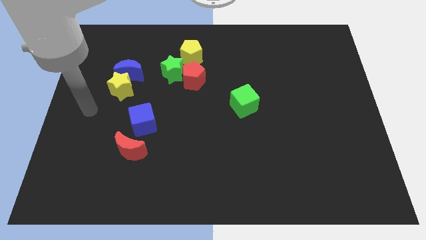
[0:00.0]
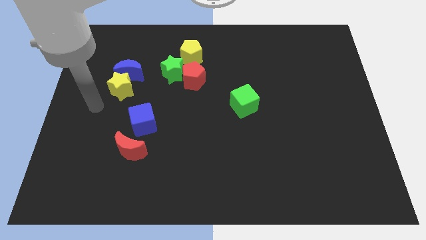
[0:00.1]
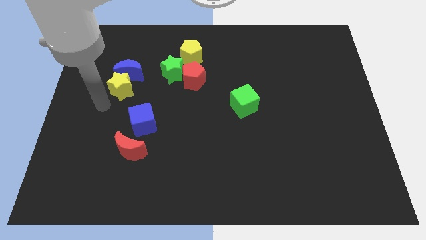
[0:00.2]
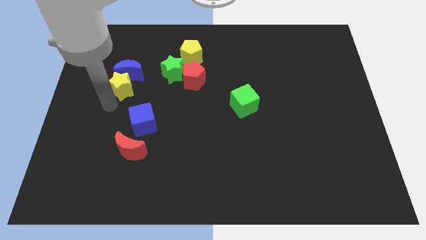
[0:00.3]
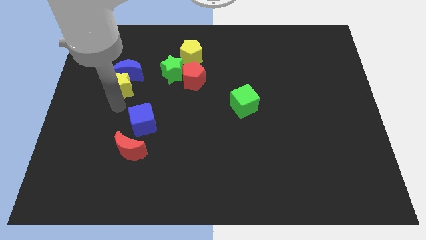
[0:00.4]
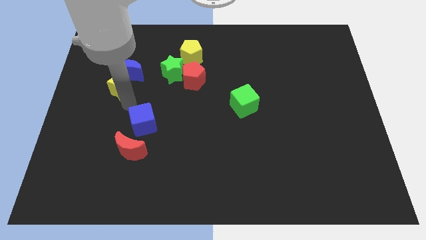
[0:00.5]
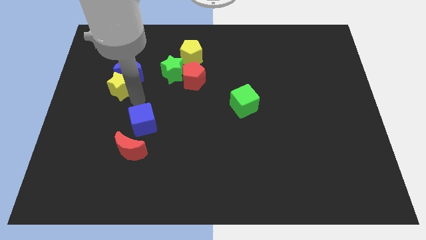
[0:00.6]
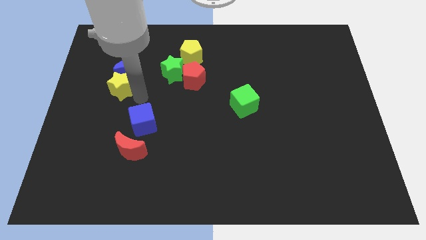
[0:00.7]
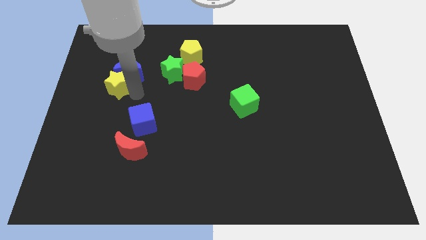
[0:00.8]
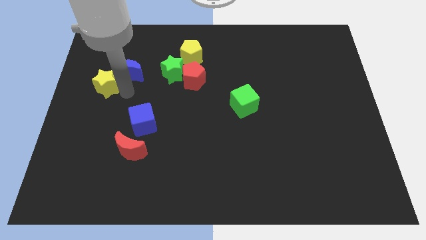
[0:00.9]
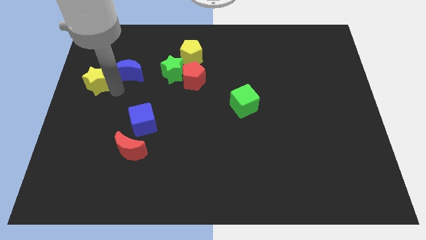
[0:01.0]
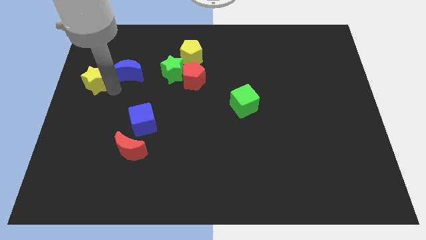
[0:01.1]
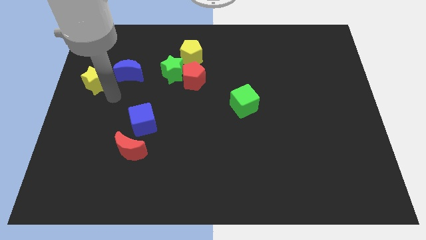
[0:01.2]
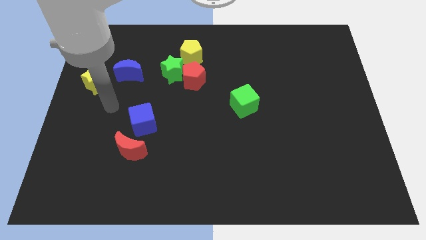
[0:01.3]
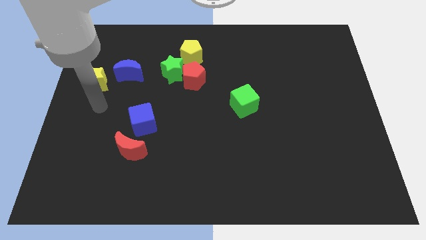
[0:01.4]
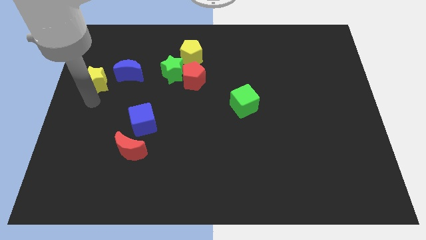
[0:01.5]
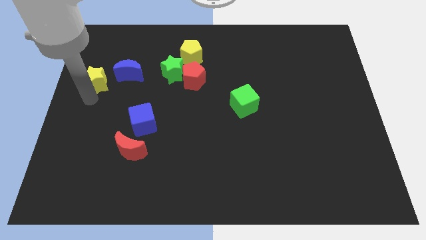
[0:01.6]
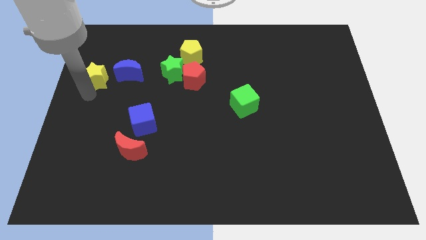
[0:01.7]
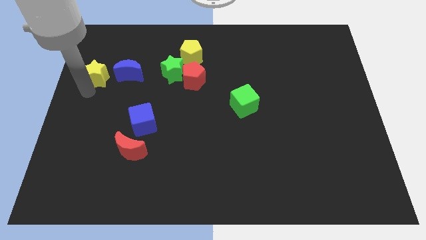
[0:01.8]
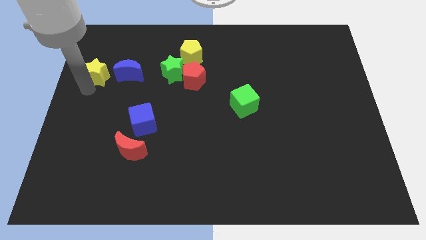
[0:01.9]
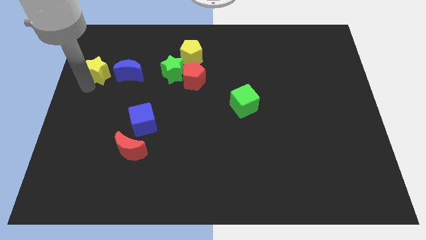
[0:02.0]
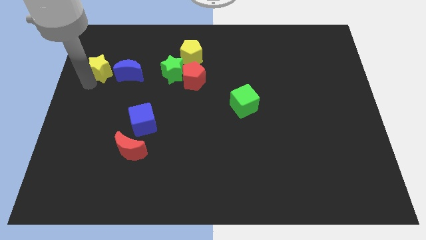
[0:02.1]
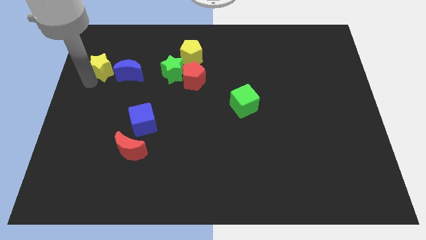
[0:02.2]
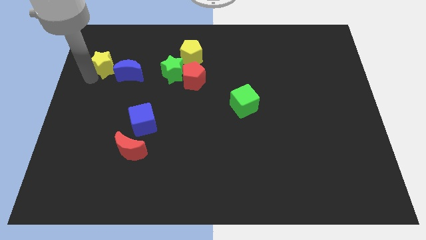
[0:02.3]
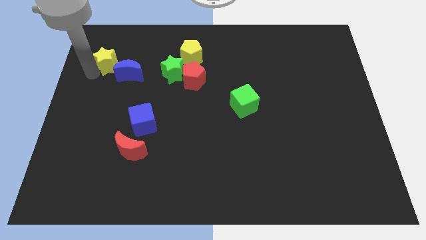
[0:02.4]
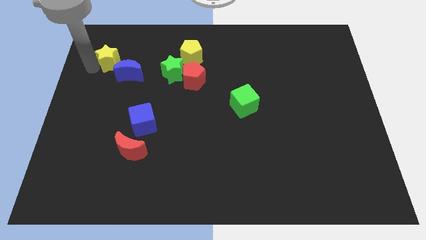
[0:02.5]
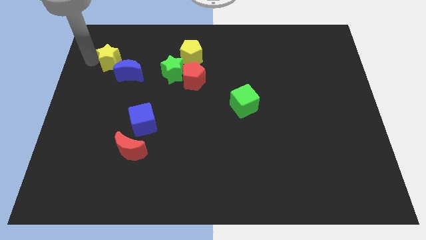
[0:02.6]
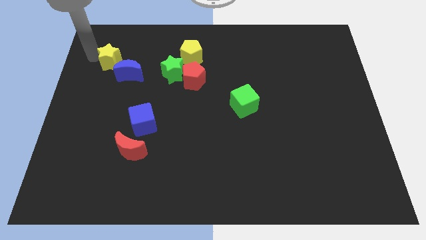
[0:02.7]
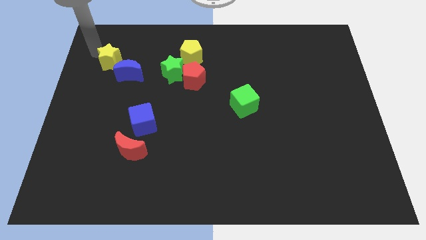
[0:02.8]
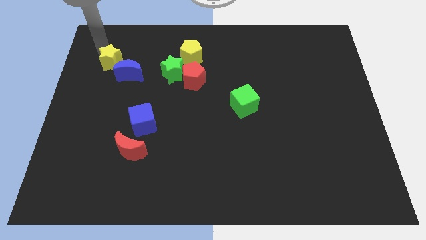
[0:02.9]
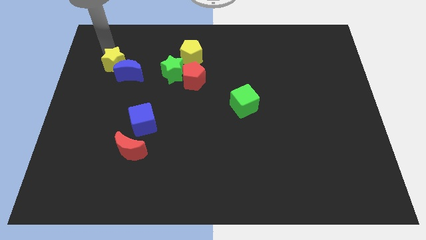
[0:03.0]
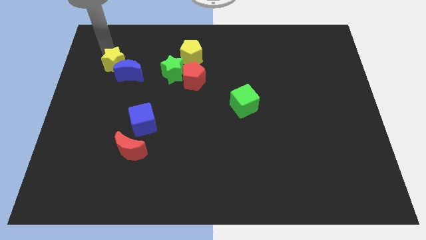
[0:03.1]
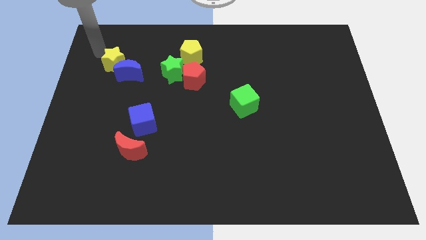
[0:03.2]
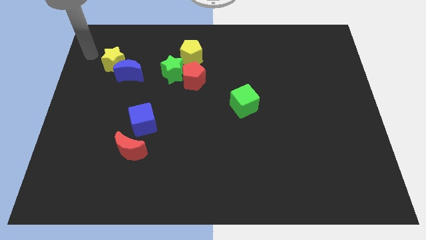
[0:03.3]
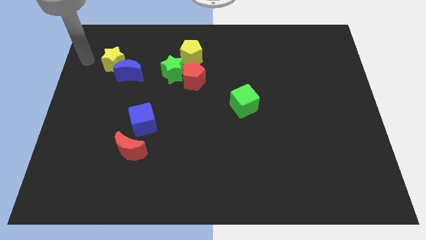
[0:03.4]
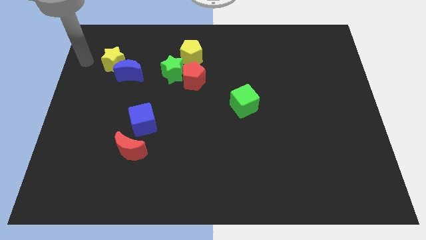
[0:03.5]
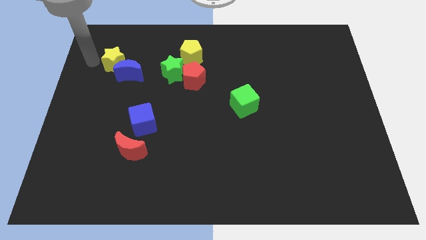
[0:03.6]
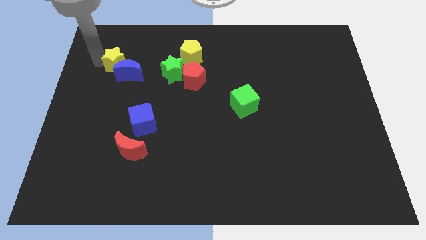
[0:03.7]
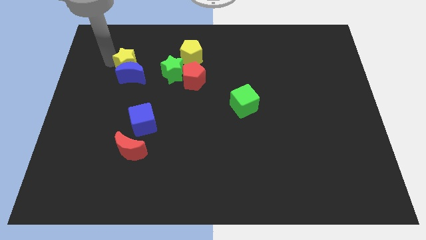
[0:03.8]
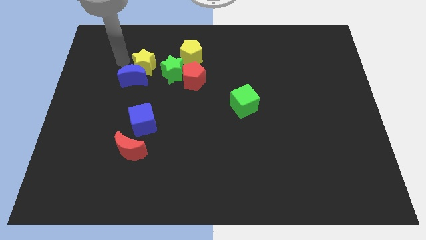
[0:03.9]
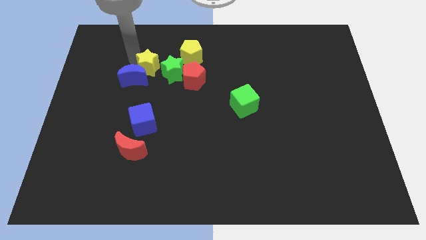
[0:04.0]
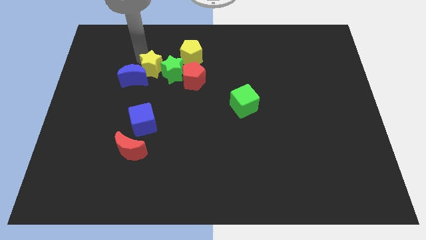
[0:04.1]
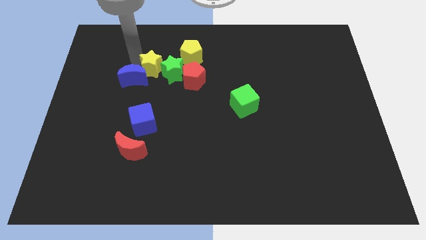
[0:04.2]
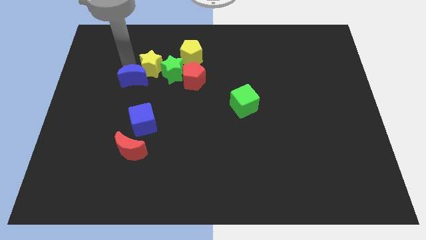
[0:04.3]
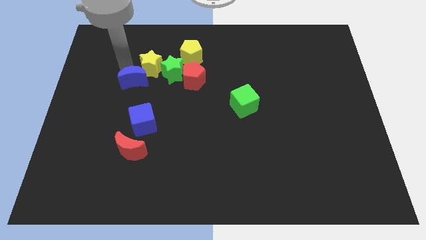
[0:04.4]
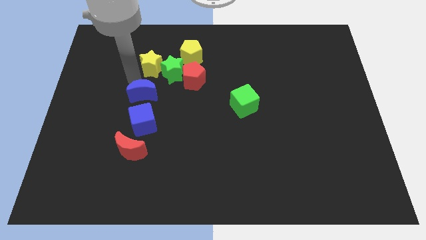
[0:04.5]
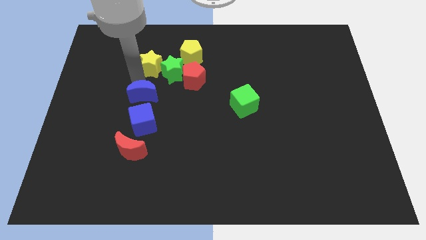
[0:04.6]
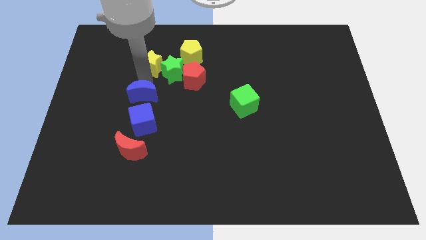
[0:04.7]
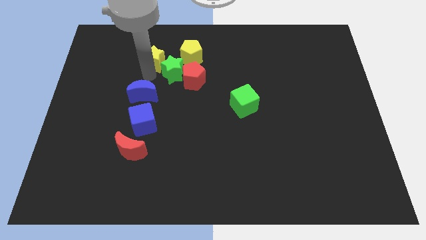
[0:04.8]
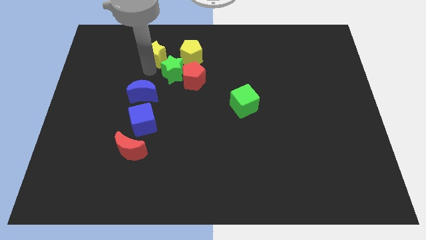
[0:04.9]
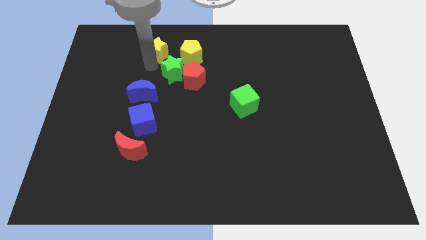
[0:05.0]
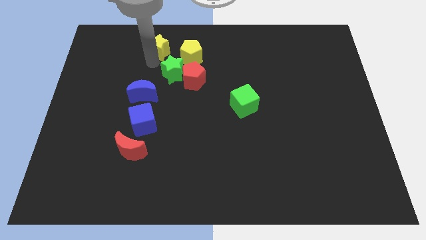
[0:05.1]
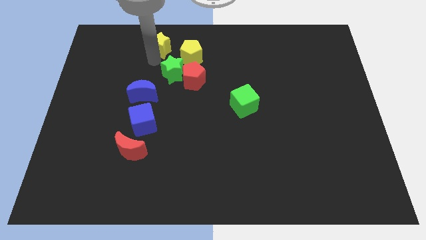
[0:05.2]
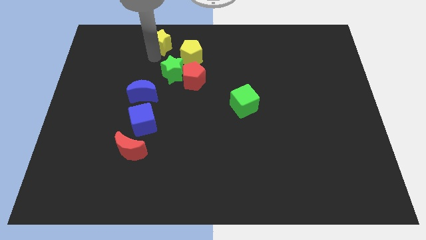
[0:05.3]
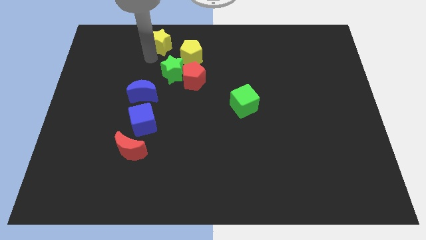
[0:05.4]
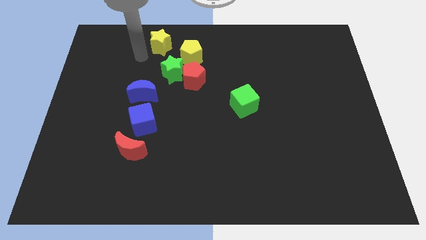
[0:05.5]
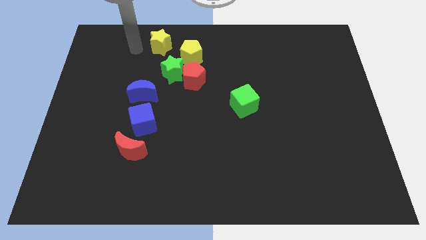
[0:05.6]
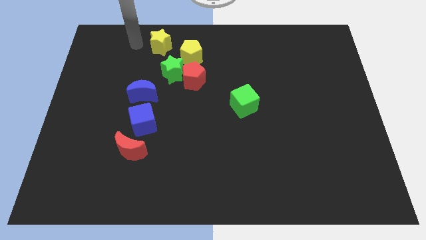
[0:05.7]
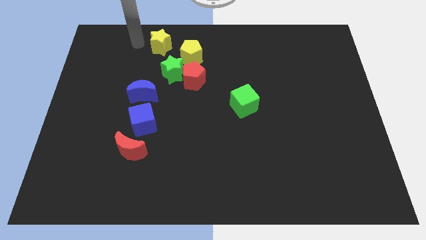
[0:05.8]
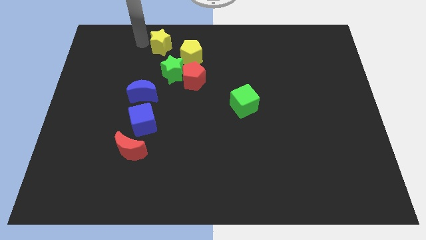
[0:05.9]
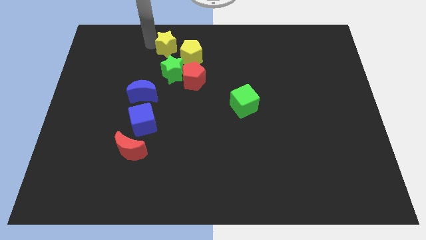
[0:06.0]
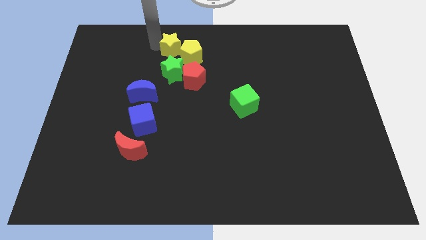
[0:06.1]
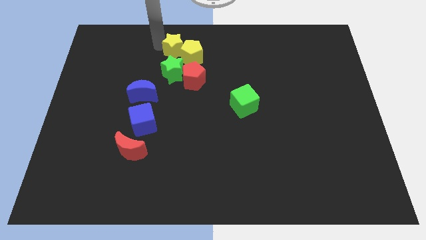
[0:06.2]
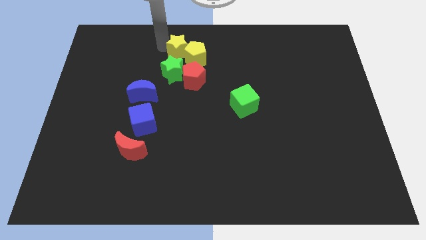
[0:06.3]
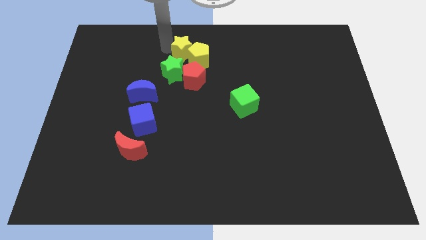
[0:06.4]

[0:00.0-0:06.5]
slide the yellow star next to the yellow pentagon

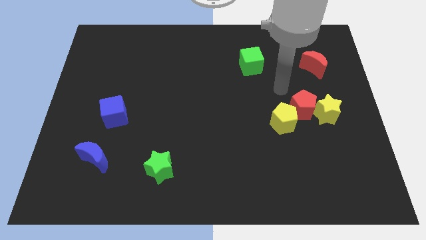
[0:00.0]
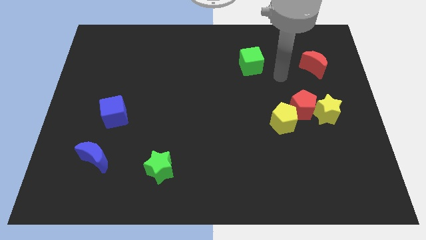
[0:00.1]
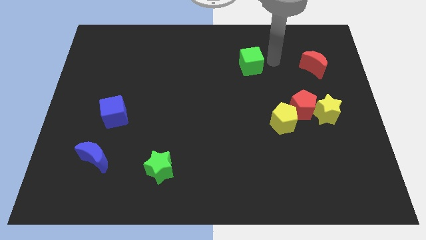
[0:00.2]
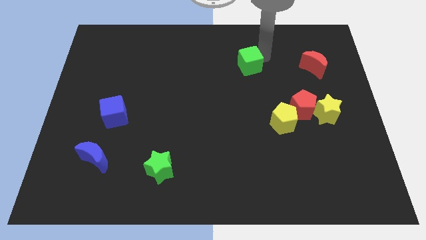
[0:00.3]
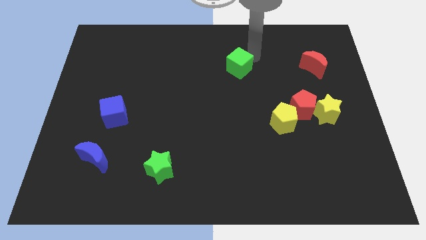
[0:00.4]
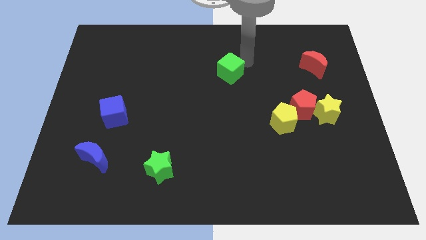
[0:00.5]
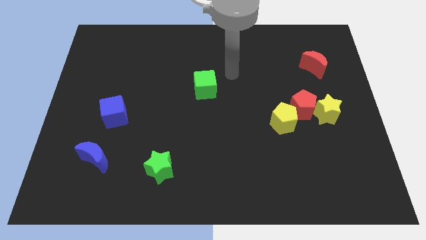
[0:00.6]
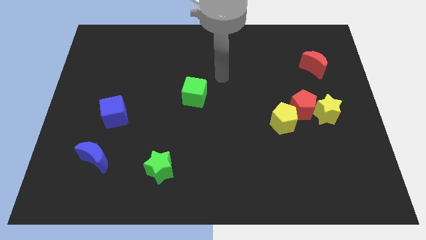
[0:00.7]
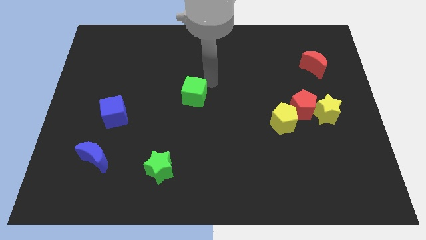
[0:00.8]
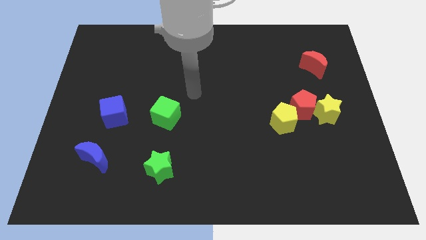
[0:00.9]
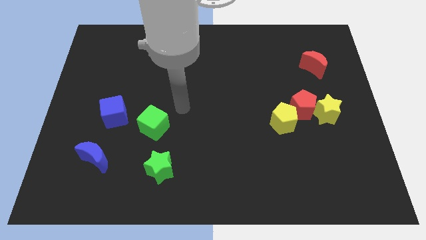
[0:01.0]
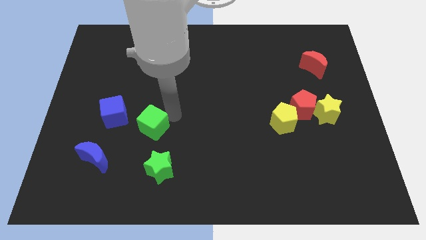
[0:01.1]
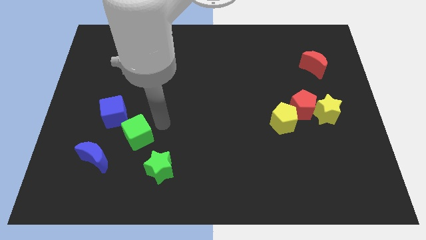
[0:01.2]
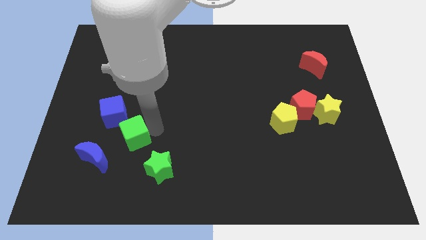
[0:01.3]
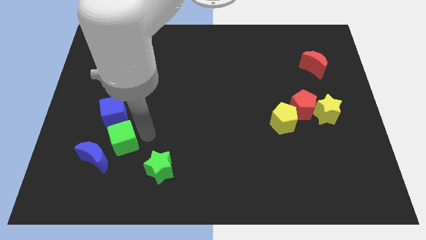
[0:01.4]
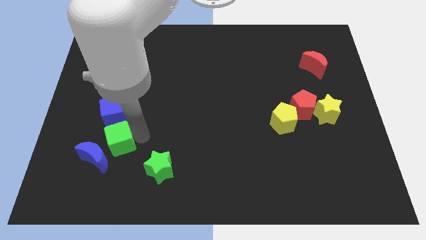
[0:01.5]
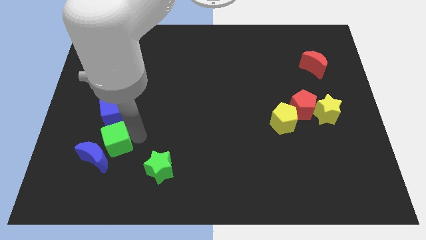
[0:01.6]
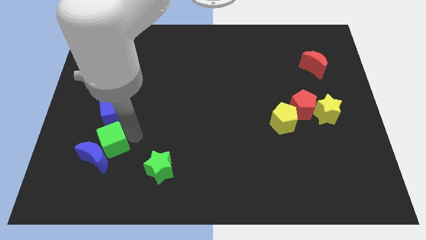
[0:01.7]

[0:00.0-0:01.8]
put the green cube towards the blue moon

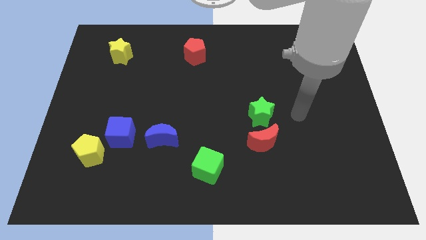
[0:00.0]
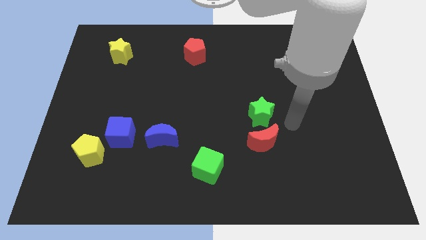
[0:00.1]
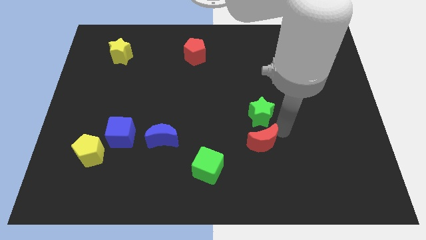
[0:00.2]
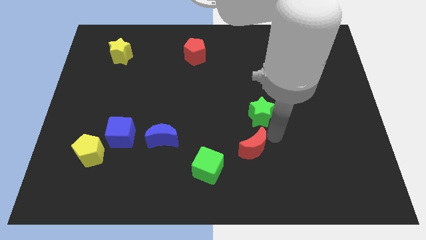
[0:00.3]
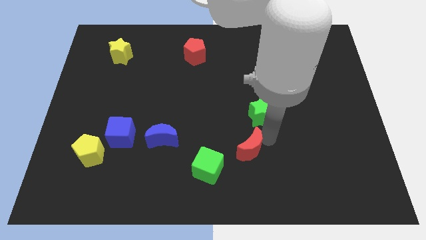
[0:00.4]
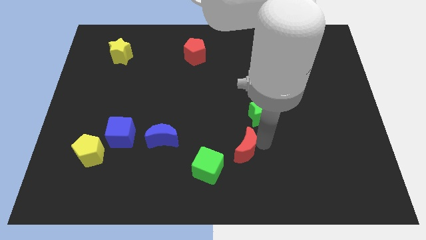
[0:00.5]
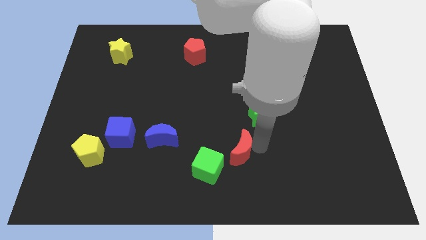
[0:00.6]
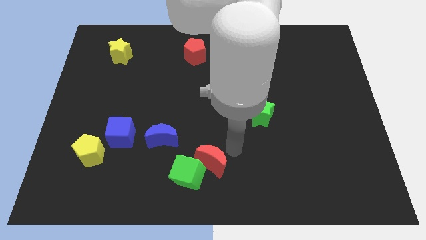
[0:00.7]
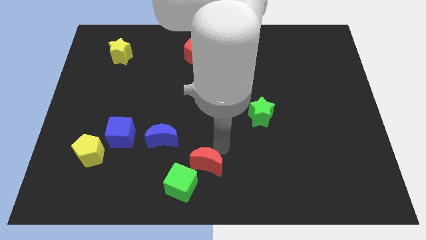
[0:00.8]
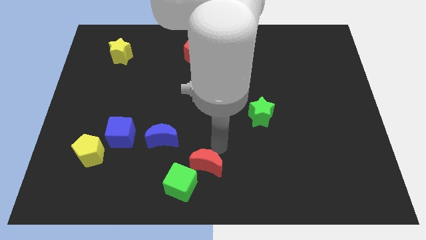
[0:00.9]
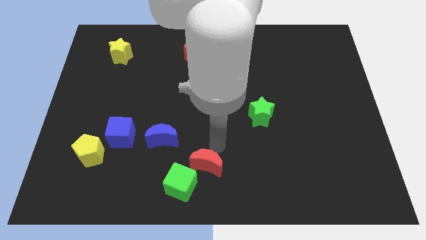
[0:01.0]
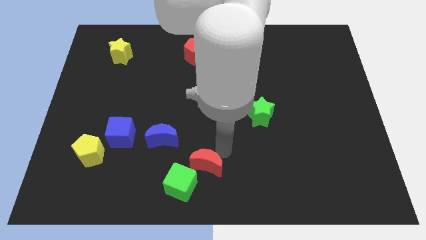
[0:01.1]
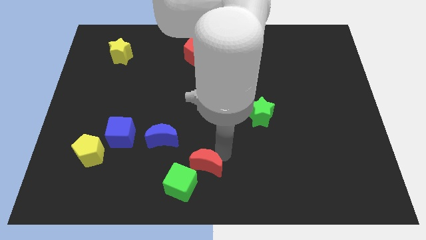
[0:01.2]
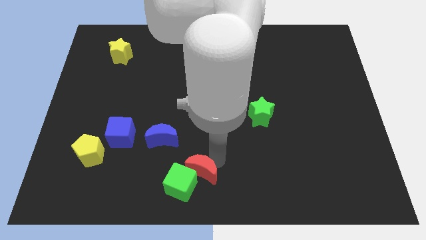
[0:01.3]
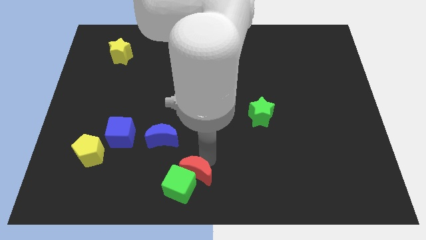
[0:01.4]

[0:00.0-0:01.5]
slide the red moon next to the green cube
